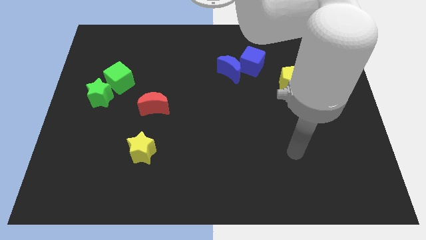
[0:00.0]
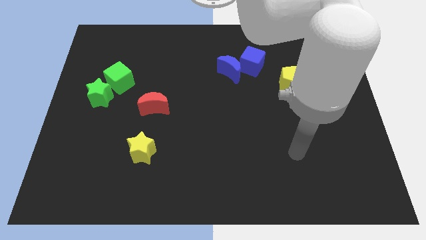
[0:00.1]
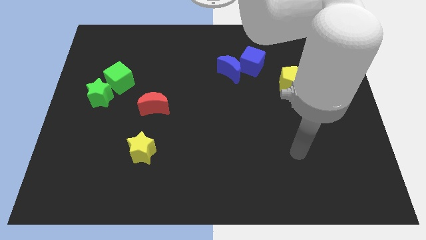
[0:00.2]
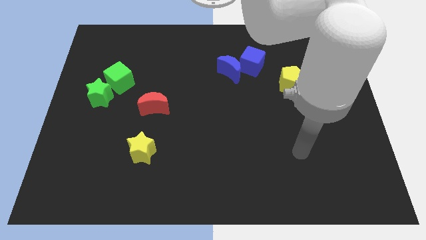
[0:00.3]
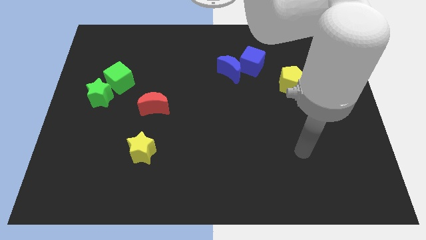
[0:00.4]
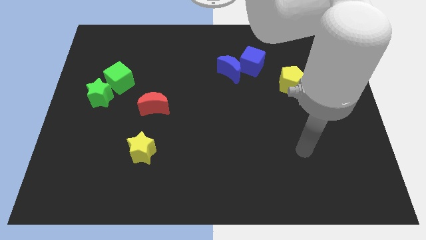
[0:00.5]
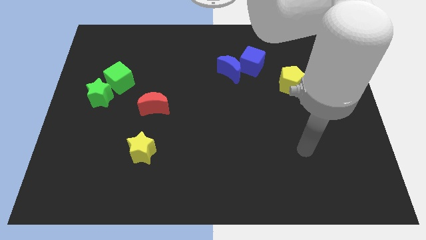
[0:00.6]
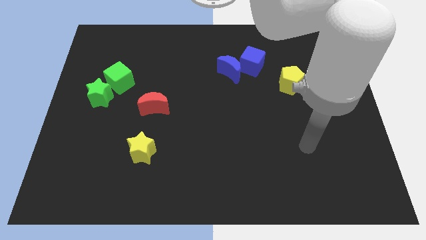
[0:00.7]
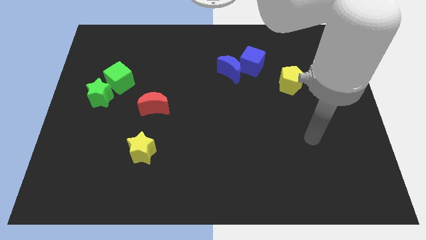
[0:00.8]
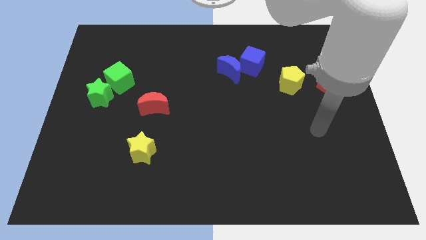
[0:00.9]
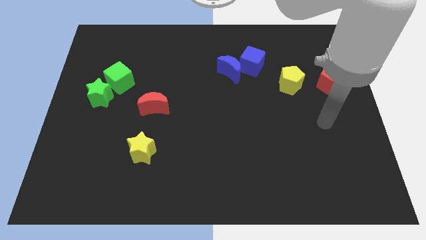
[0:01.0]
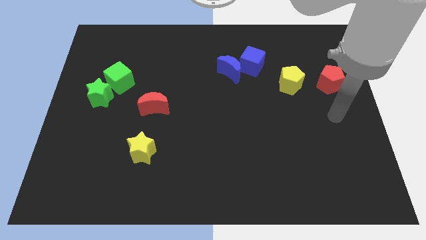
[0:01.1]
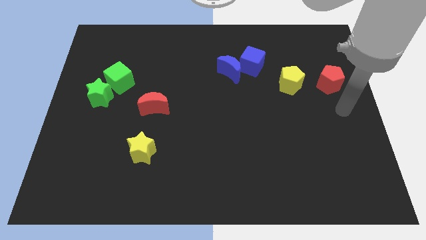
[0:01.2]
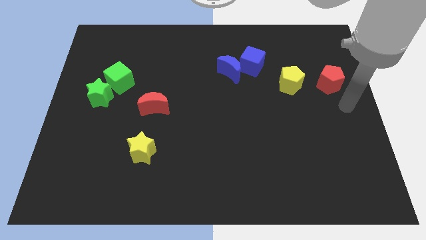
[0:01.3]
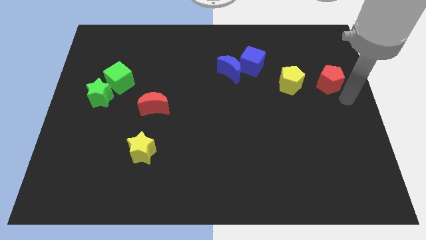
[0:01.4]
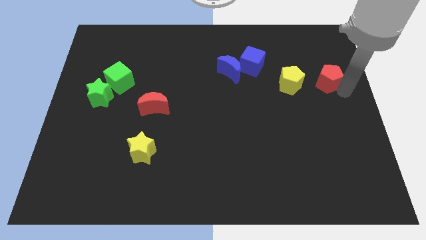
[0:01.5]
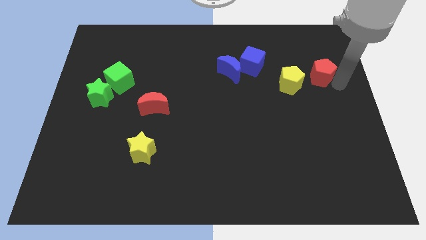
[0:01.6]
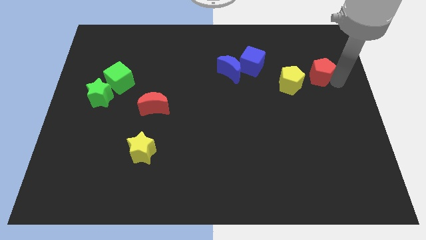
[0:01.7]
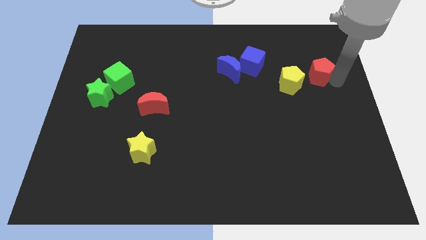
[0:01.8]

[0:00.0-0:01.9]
slightly push the red pentagon towards yellow pentagon

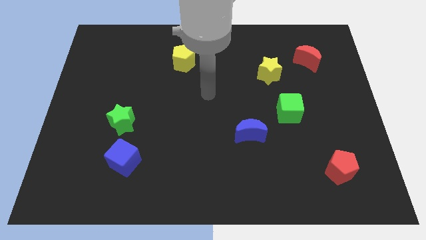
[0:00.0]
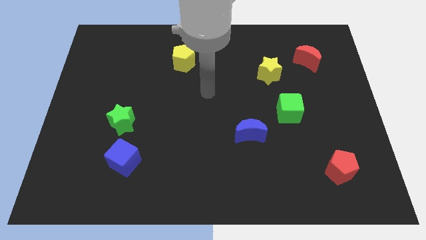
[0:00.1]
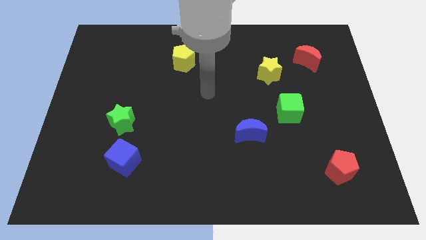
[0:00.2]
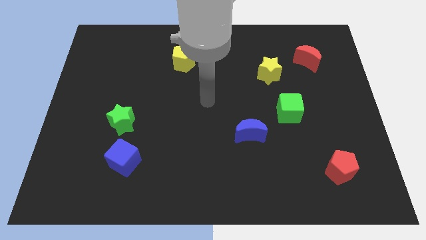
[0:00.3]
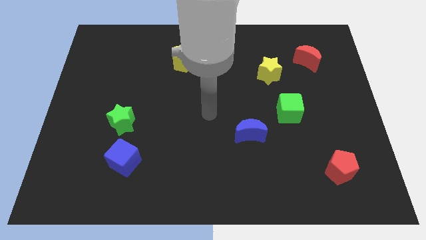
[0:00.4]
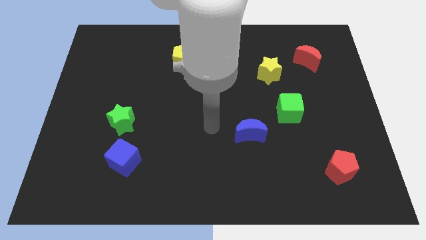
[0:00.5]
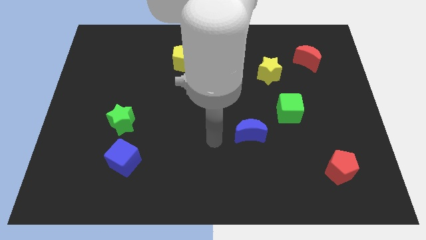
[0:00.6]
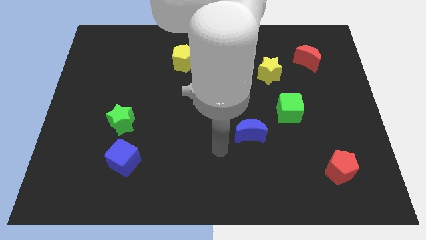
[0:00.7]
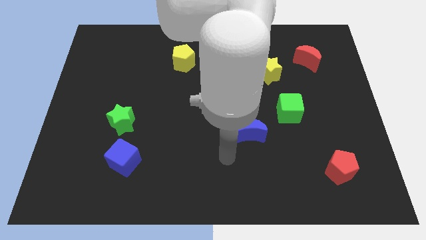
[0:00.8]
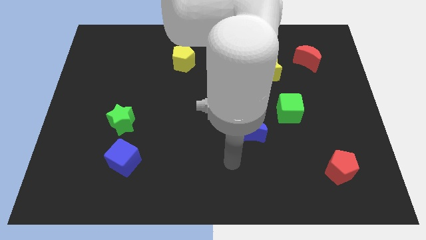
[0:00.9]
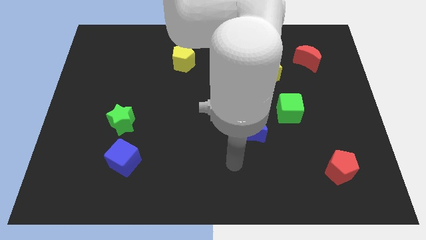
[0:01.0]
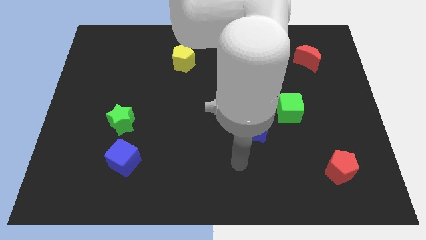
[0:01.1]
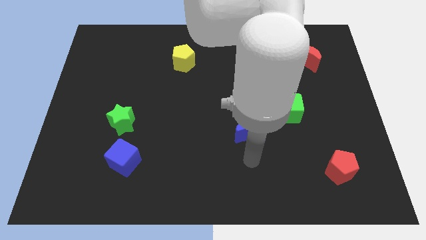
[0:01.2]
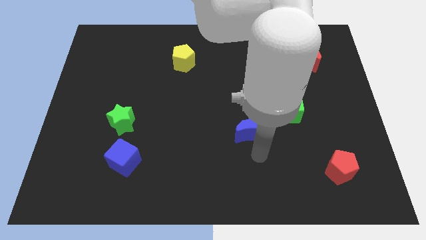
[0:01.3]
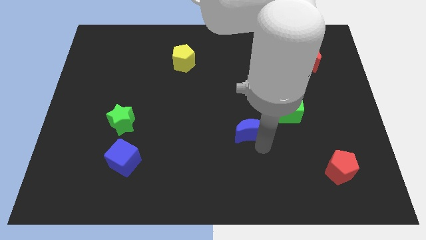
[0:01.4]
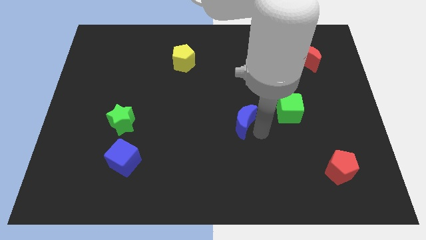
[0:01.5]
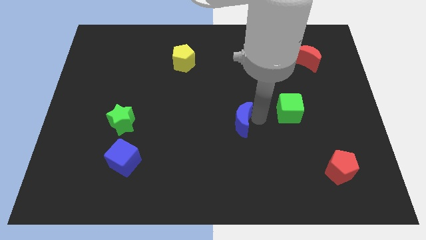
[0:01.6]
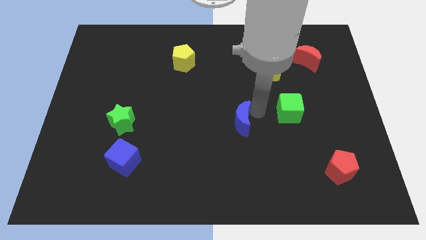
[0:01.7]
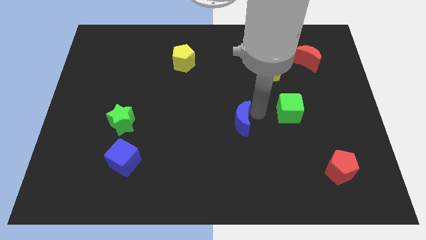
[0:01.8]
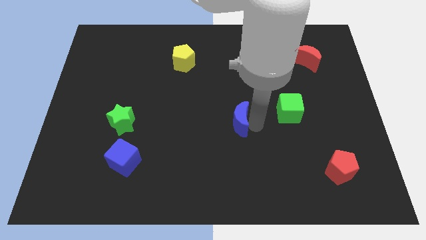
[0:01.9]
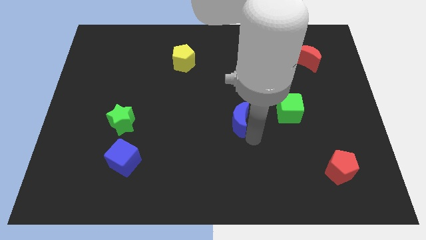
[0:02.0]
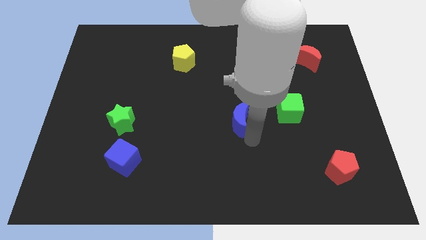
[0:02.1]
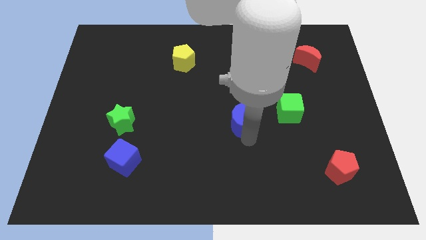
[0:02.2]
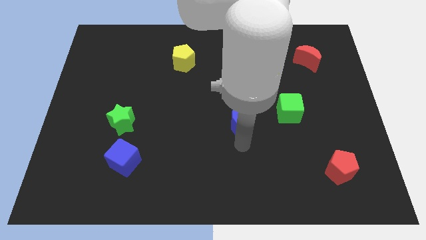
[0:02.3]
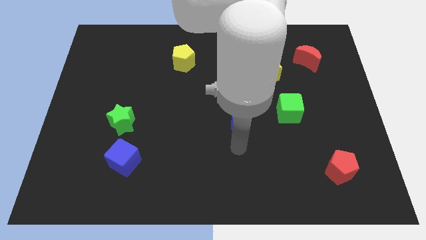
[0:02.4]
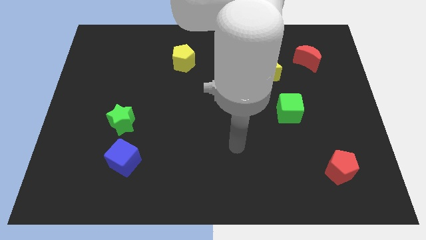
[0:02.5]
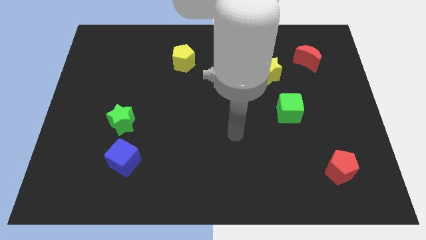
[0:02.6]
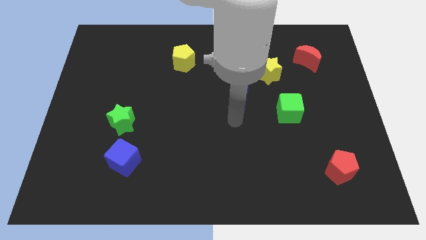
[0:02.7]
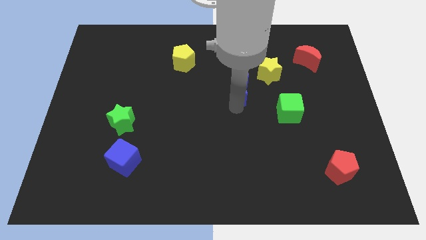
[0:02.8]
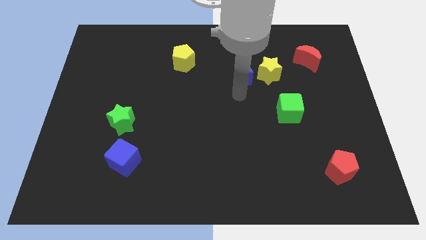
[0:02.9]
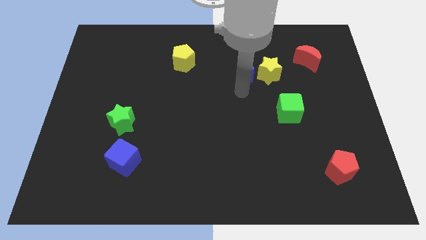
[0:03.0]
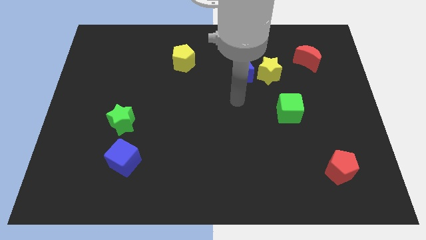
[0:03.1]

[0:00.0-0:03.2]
move the blue crescent left to yellow star

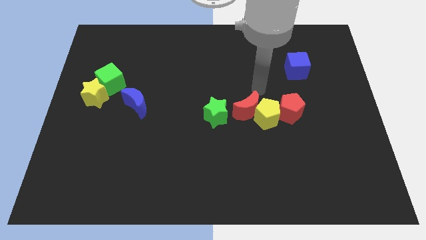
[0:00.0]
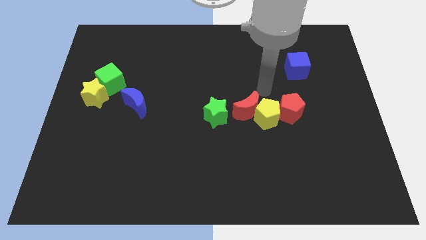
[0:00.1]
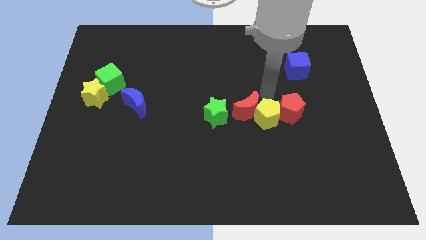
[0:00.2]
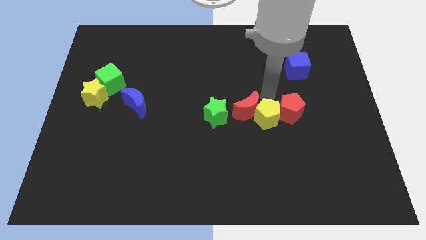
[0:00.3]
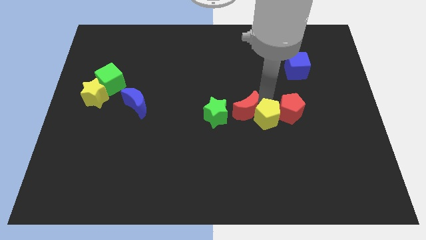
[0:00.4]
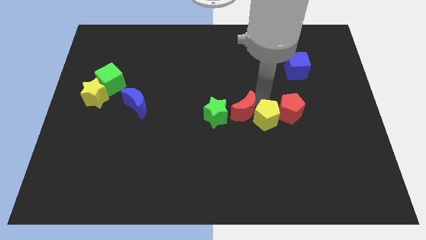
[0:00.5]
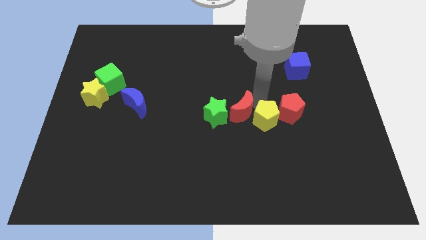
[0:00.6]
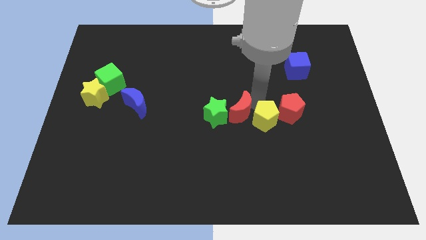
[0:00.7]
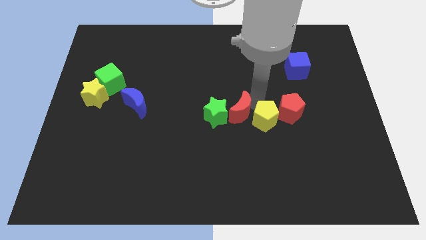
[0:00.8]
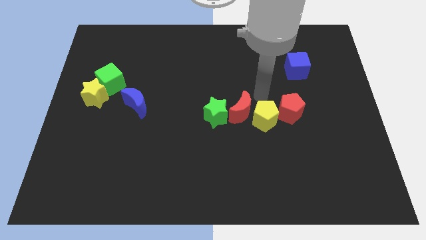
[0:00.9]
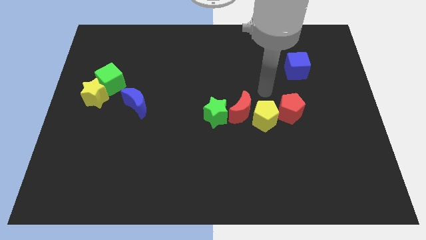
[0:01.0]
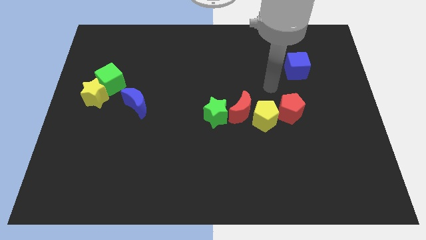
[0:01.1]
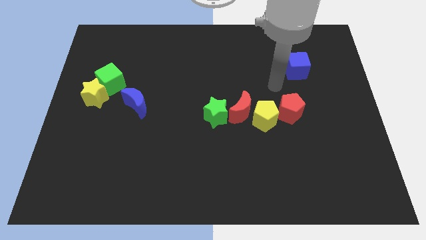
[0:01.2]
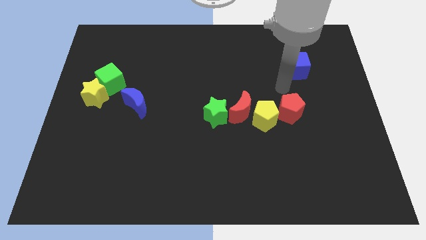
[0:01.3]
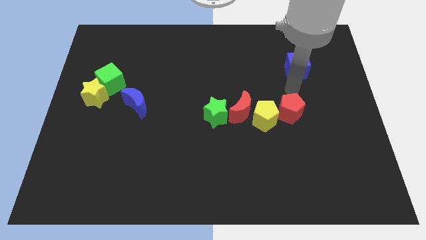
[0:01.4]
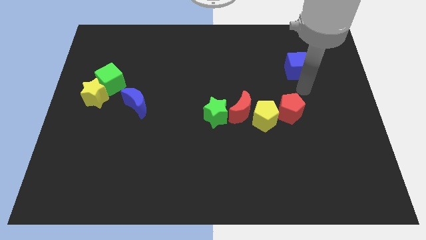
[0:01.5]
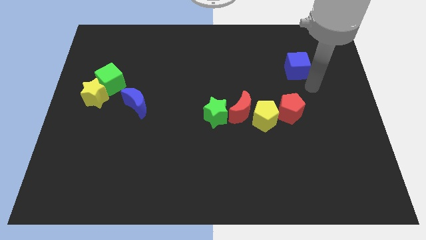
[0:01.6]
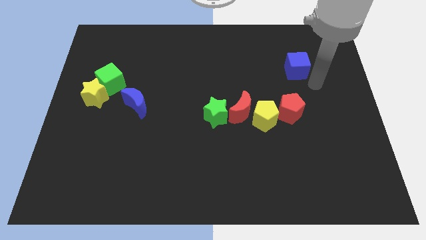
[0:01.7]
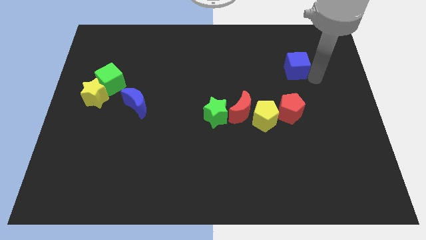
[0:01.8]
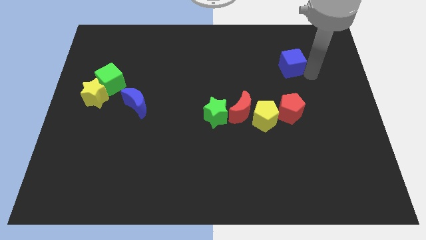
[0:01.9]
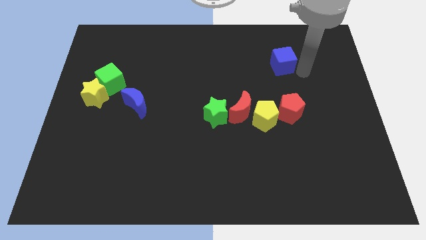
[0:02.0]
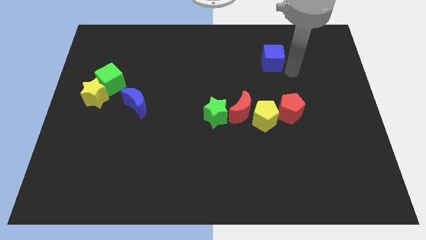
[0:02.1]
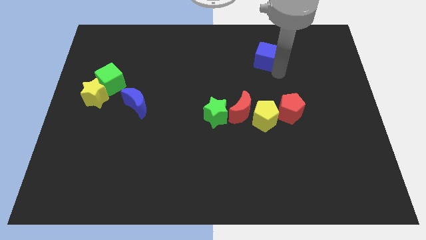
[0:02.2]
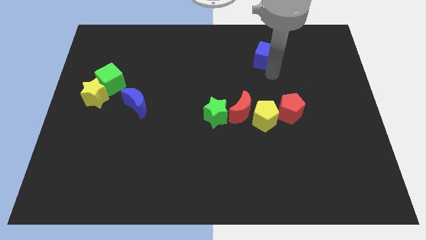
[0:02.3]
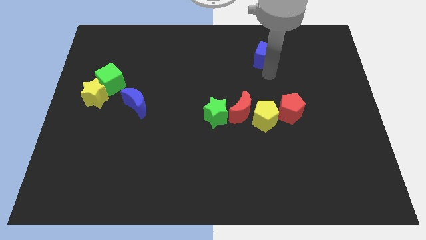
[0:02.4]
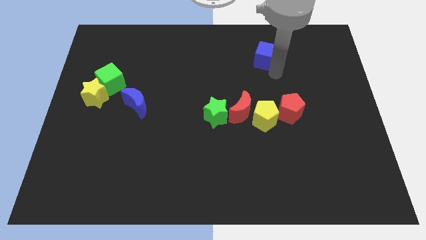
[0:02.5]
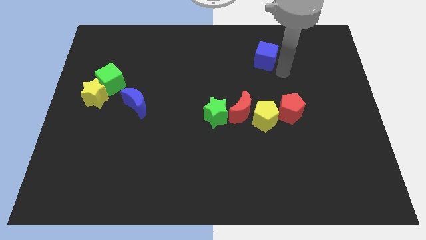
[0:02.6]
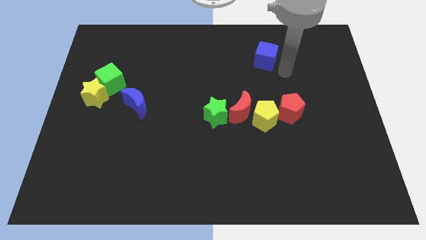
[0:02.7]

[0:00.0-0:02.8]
move the blue cube towards the top of the board

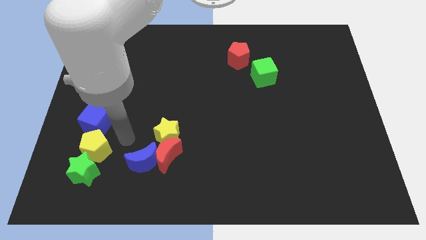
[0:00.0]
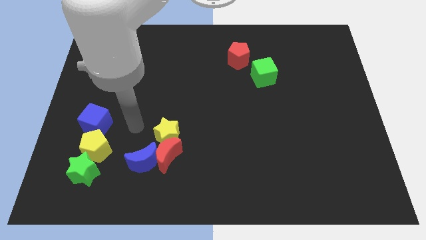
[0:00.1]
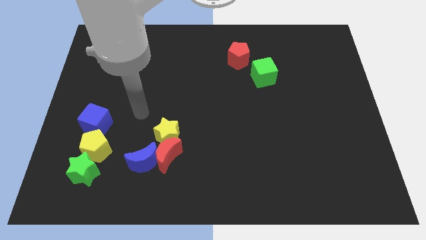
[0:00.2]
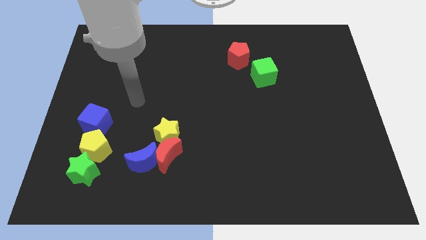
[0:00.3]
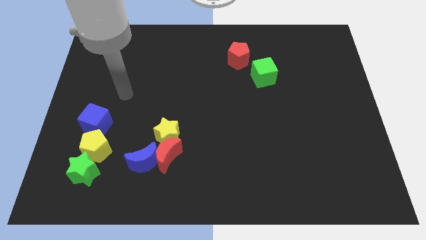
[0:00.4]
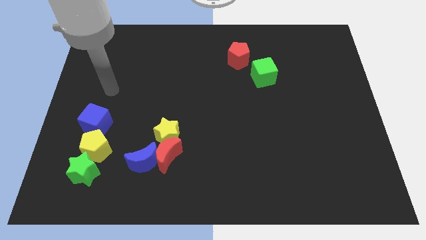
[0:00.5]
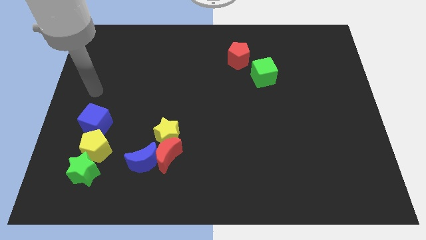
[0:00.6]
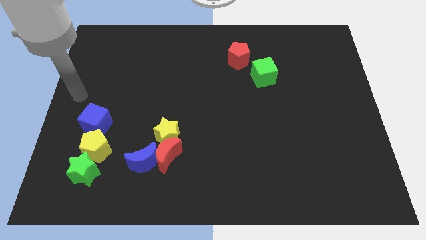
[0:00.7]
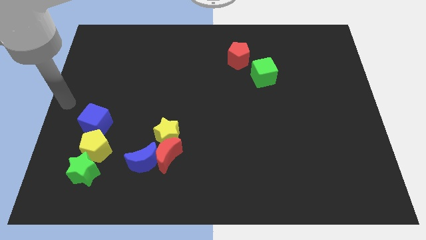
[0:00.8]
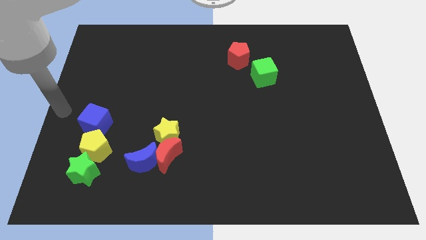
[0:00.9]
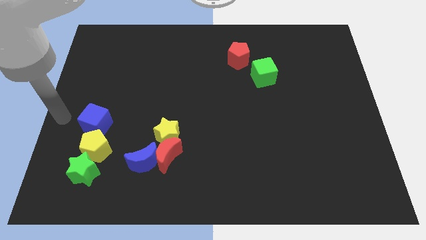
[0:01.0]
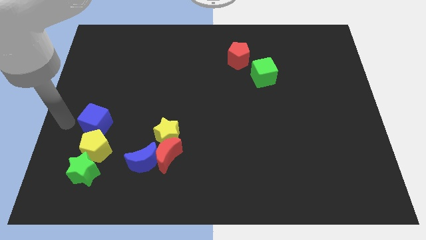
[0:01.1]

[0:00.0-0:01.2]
place yourself left to blue cube
